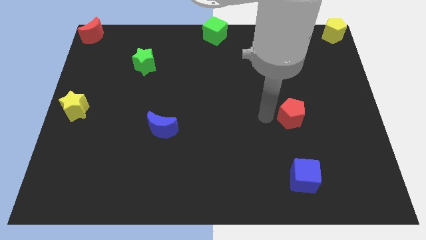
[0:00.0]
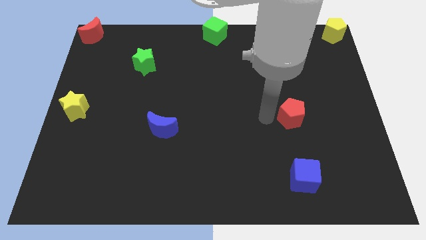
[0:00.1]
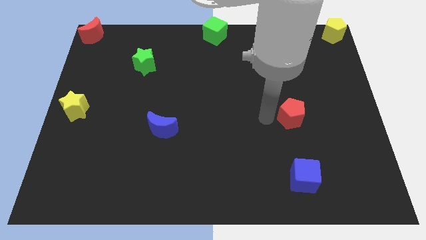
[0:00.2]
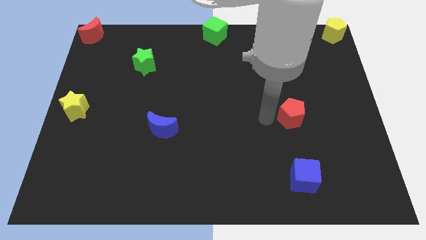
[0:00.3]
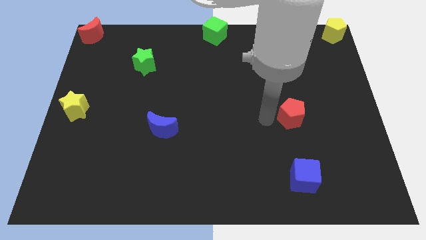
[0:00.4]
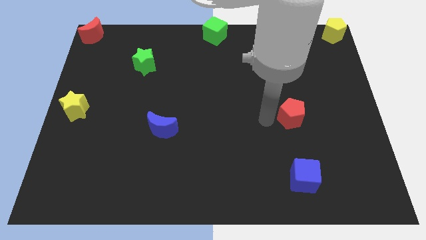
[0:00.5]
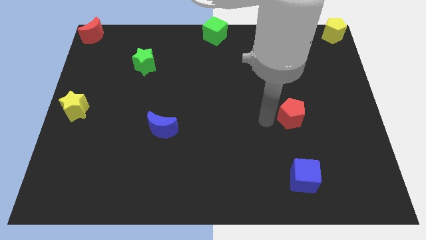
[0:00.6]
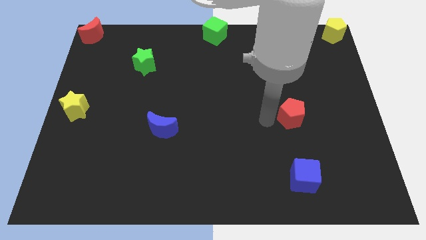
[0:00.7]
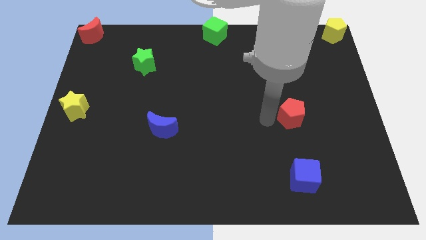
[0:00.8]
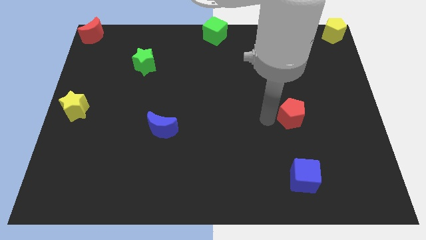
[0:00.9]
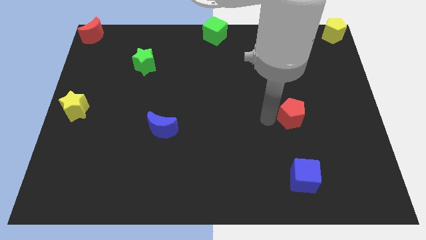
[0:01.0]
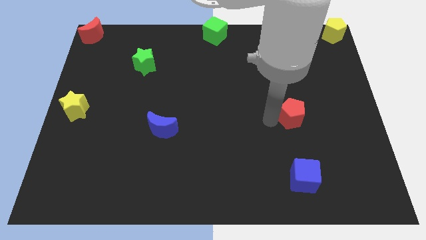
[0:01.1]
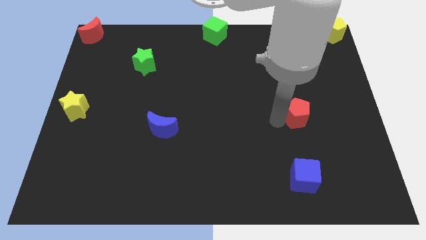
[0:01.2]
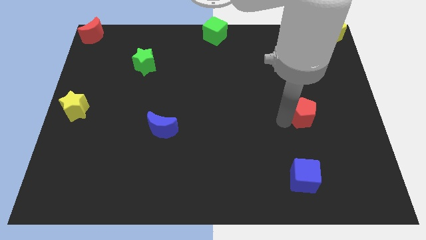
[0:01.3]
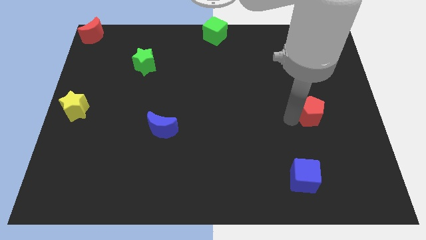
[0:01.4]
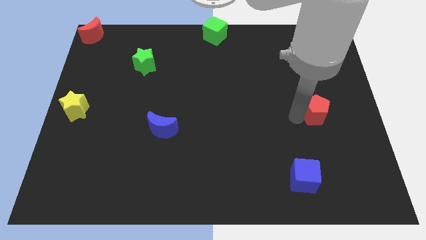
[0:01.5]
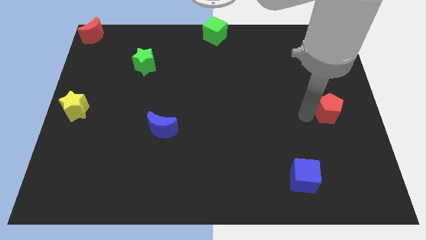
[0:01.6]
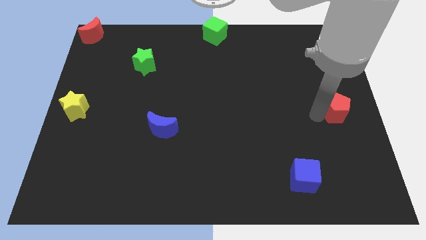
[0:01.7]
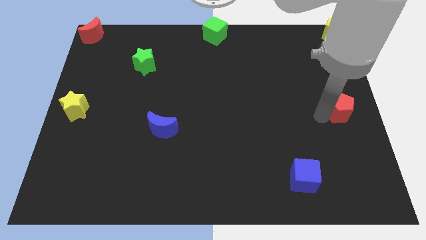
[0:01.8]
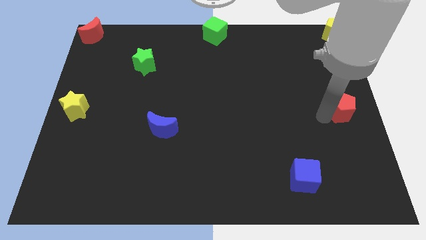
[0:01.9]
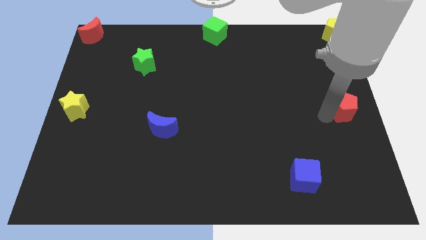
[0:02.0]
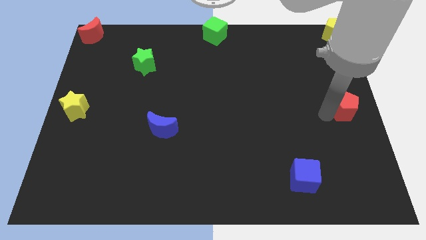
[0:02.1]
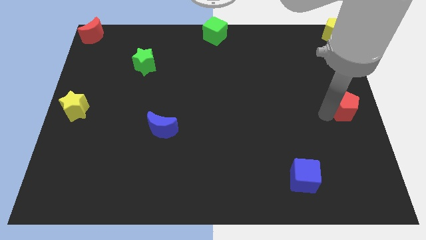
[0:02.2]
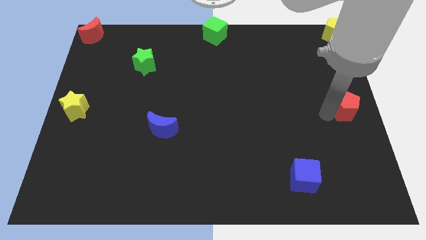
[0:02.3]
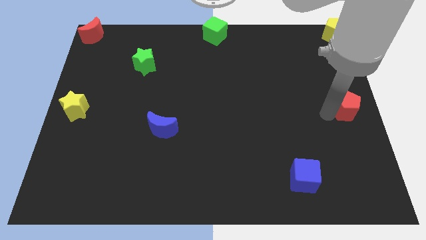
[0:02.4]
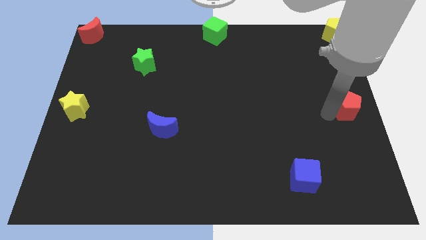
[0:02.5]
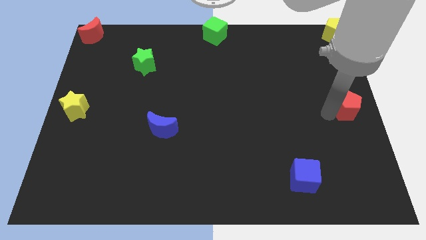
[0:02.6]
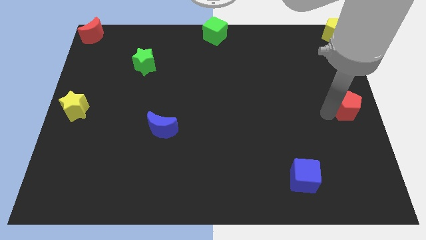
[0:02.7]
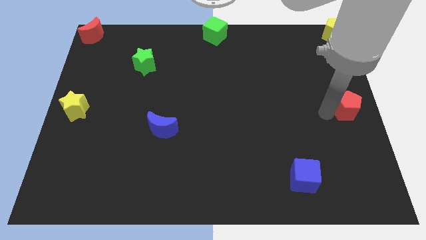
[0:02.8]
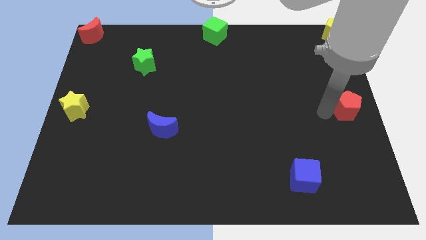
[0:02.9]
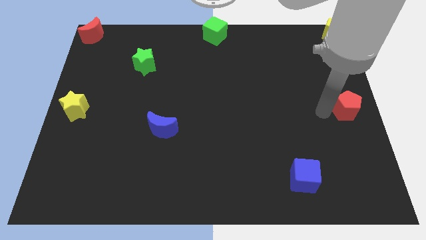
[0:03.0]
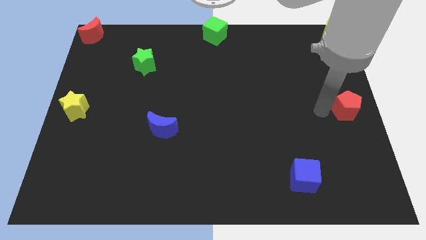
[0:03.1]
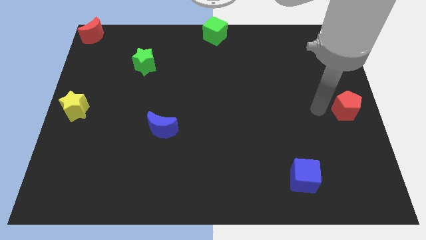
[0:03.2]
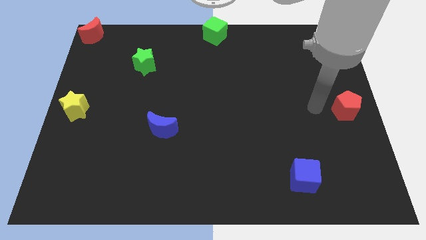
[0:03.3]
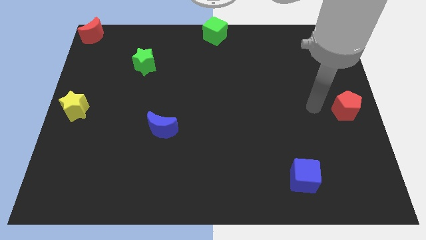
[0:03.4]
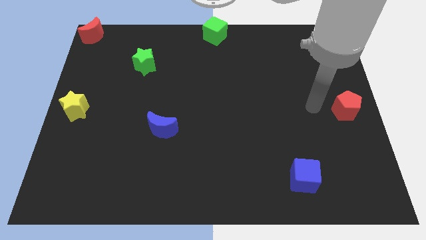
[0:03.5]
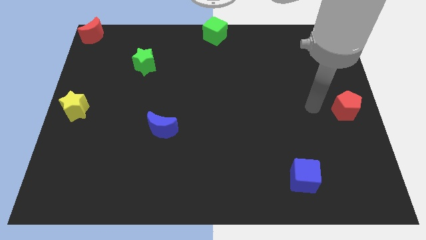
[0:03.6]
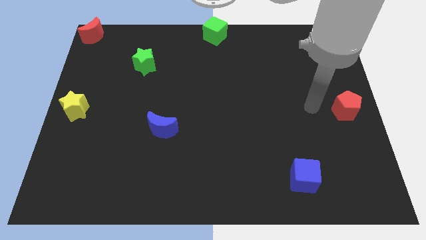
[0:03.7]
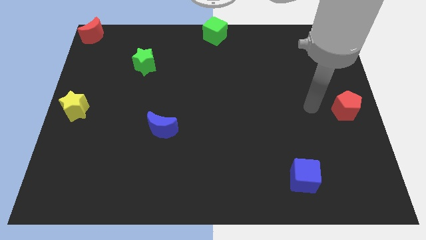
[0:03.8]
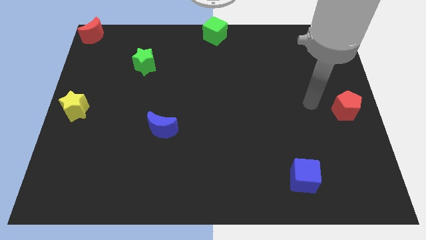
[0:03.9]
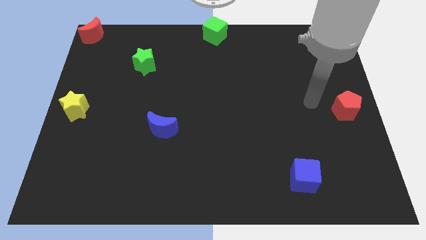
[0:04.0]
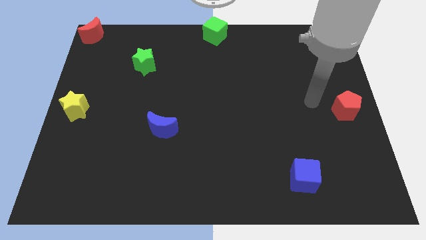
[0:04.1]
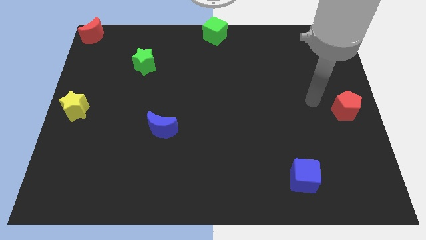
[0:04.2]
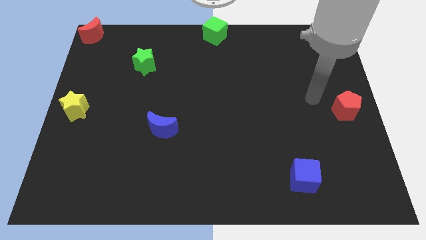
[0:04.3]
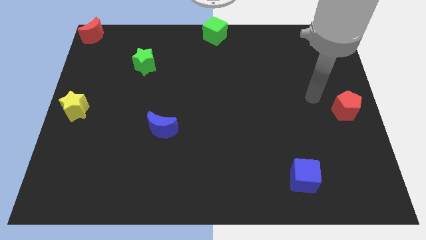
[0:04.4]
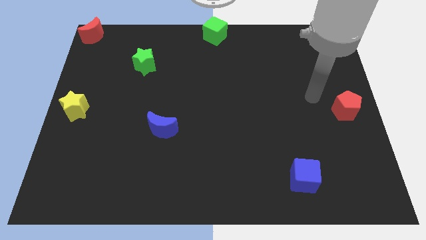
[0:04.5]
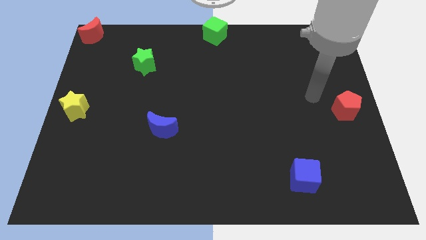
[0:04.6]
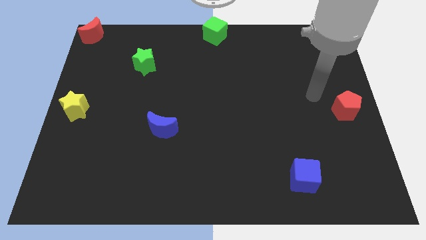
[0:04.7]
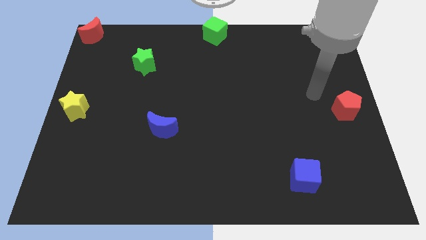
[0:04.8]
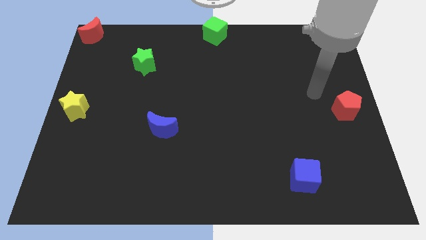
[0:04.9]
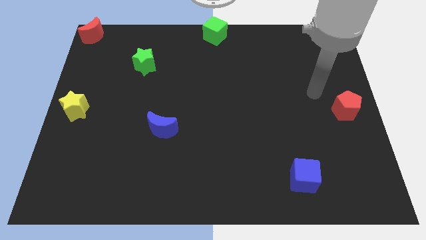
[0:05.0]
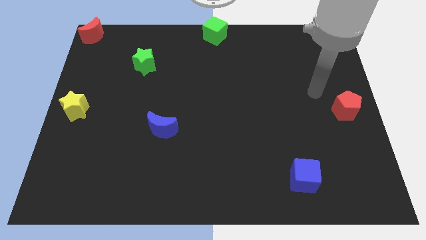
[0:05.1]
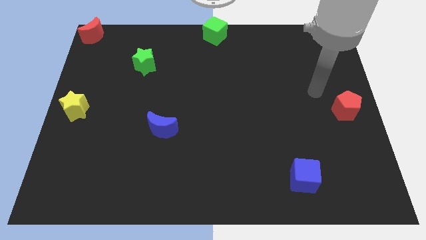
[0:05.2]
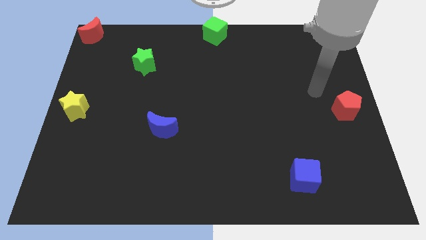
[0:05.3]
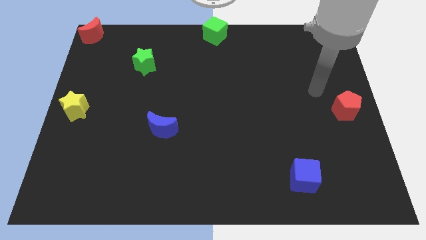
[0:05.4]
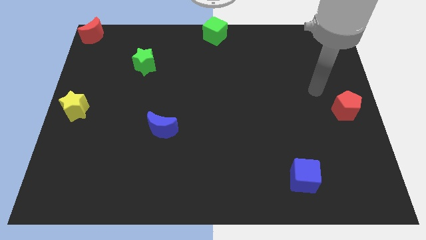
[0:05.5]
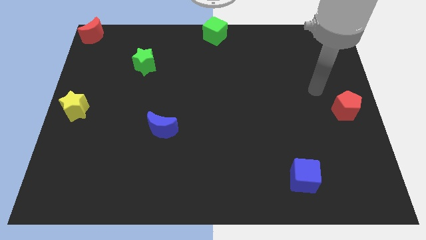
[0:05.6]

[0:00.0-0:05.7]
place the red pentagon vertically below the yellow pentagon

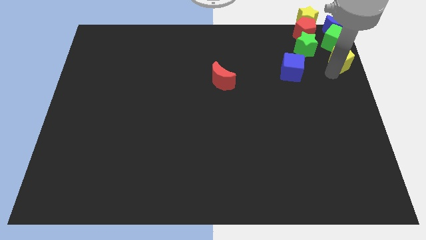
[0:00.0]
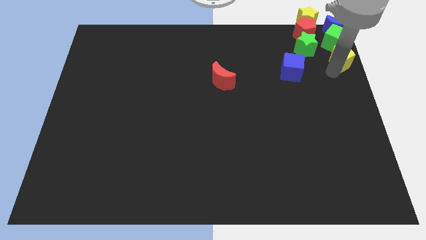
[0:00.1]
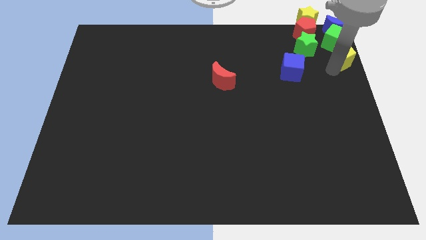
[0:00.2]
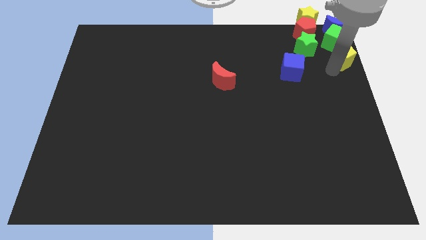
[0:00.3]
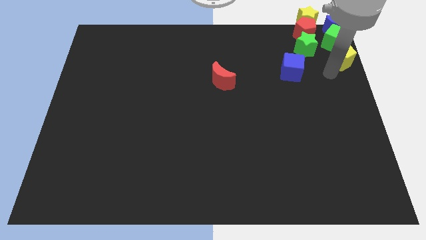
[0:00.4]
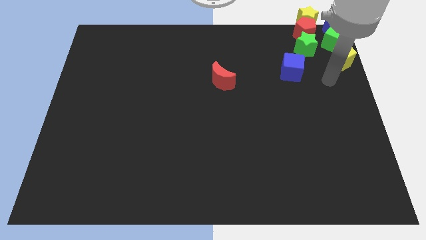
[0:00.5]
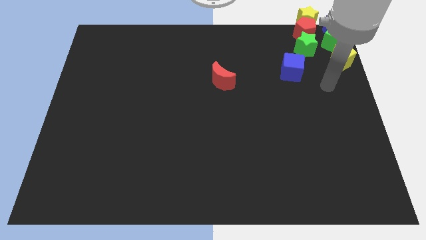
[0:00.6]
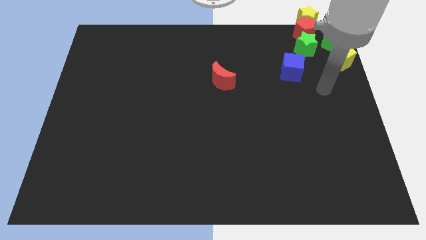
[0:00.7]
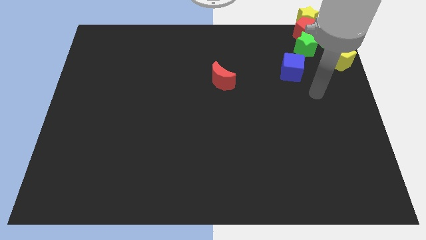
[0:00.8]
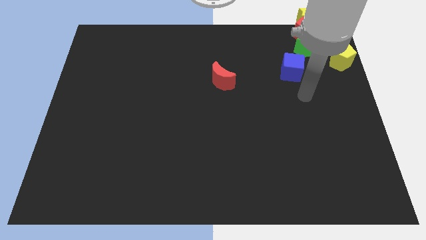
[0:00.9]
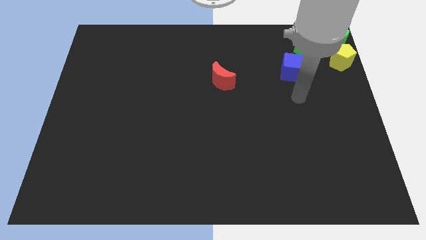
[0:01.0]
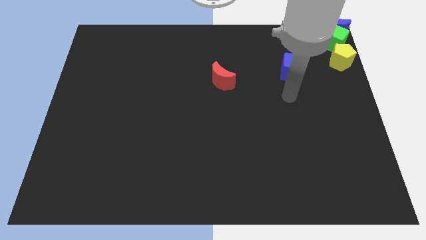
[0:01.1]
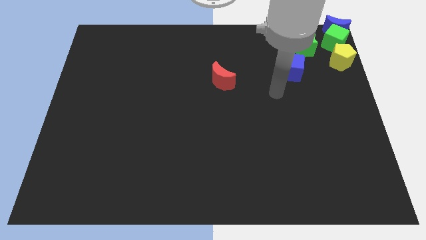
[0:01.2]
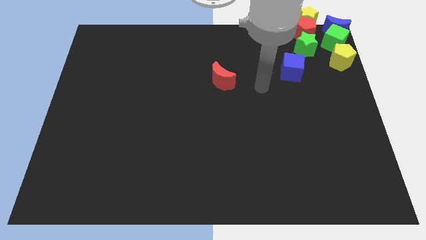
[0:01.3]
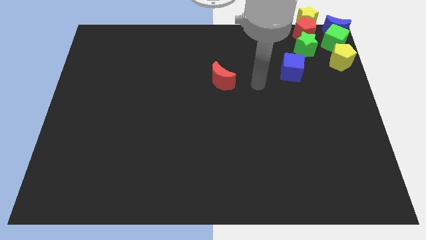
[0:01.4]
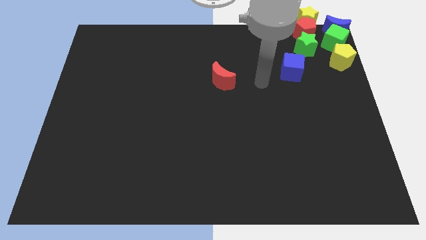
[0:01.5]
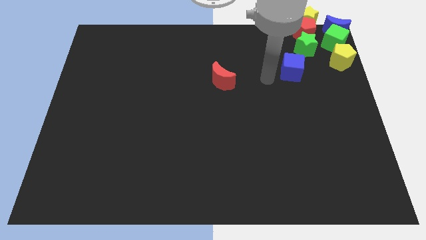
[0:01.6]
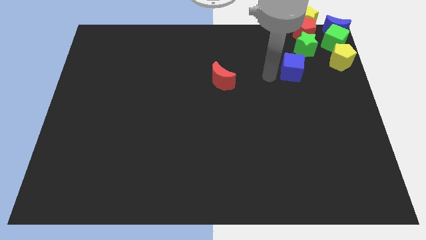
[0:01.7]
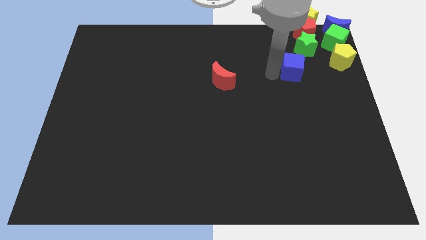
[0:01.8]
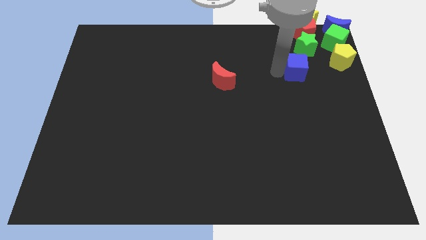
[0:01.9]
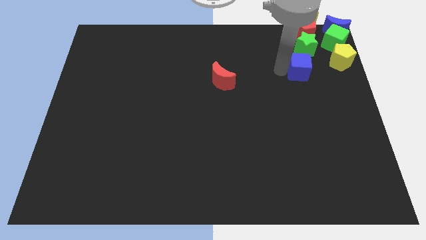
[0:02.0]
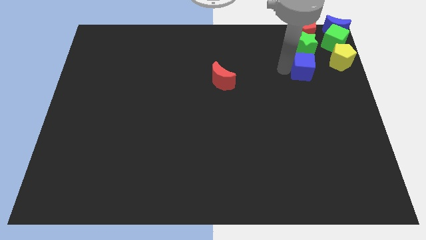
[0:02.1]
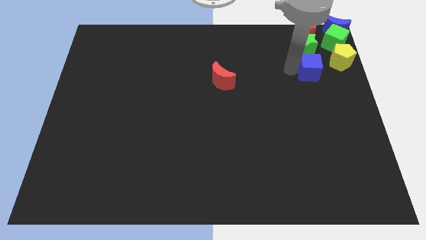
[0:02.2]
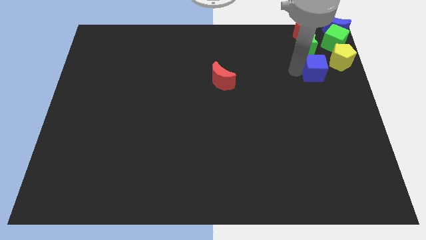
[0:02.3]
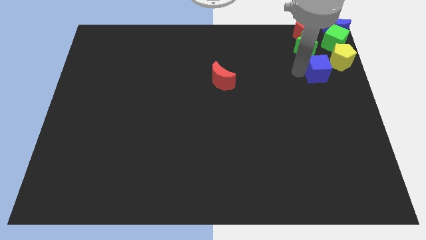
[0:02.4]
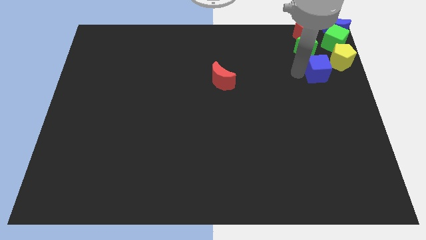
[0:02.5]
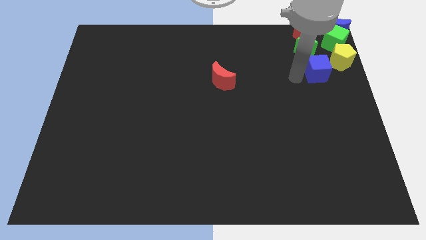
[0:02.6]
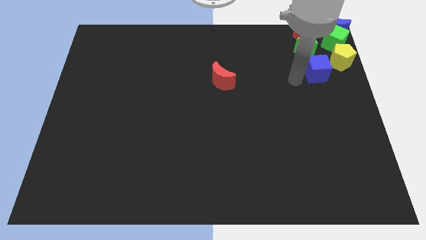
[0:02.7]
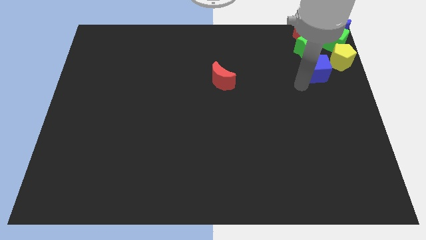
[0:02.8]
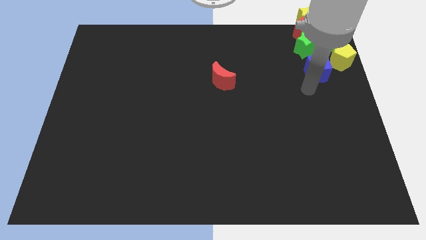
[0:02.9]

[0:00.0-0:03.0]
slightly move the blue cube towards the right

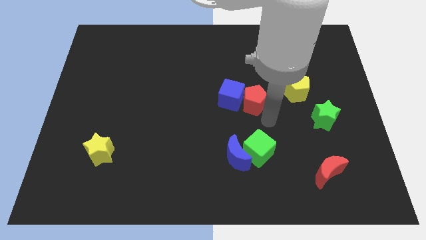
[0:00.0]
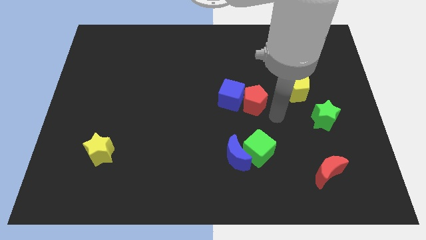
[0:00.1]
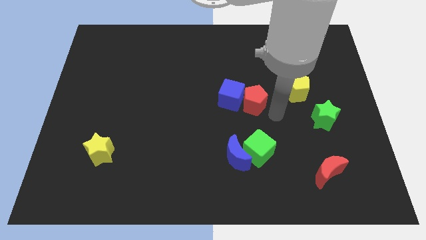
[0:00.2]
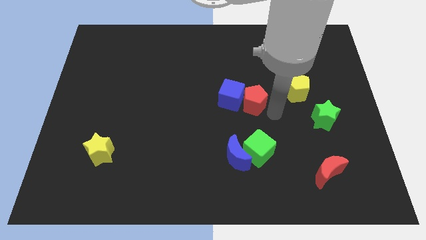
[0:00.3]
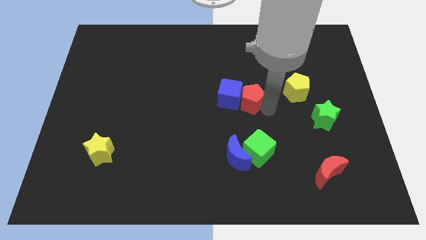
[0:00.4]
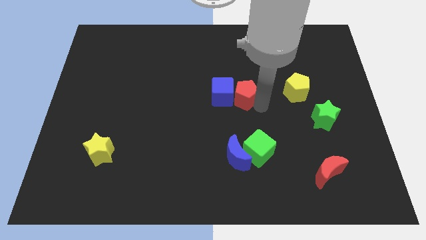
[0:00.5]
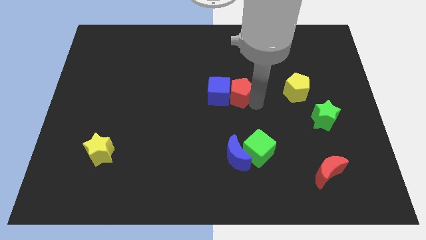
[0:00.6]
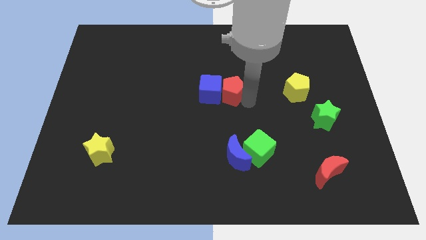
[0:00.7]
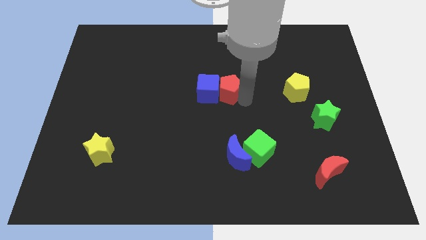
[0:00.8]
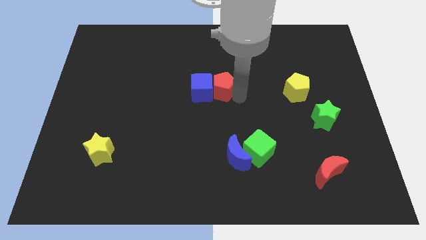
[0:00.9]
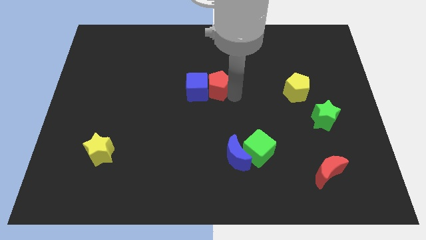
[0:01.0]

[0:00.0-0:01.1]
place red pentagon and blue cube at center
